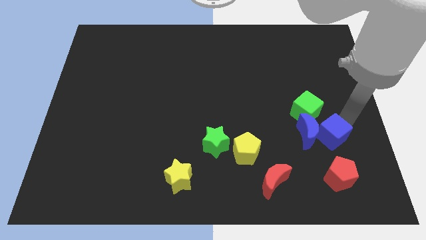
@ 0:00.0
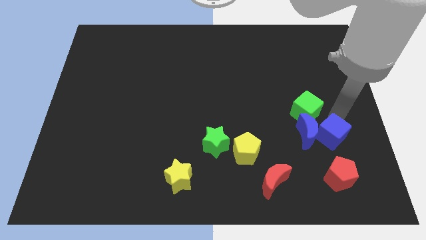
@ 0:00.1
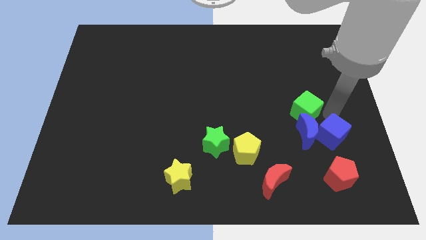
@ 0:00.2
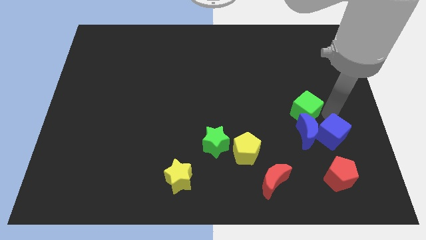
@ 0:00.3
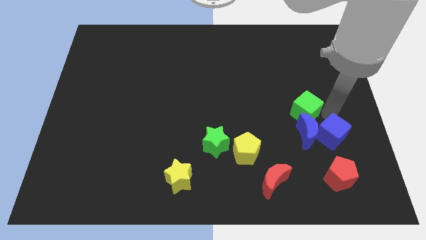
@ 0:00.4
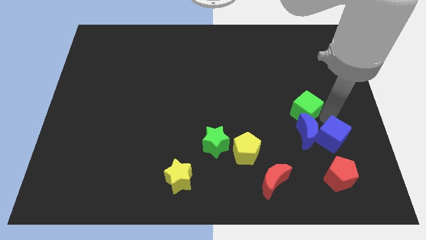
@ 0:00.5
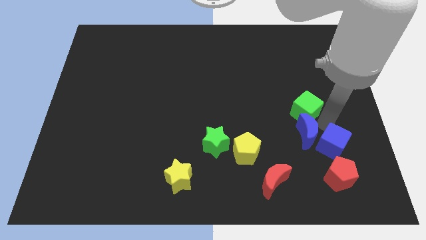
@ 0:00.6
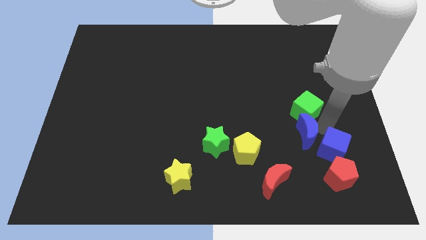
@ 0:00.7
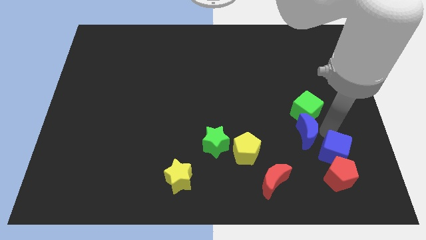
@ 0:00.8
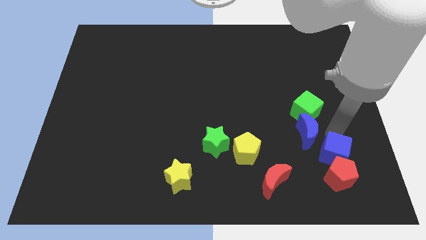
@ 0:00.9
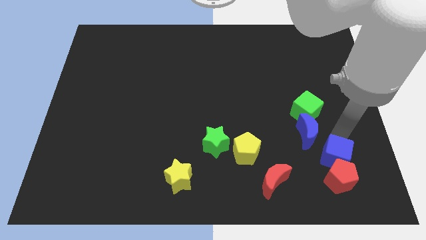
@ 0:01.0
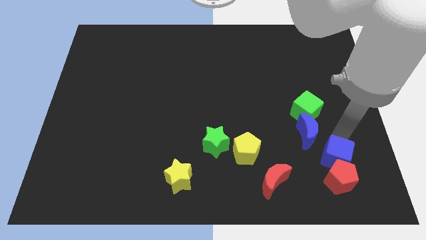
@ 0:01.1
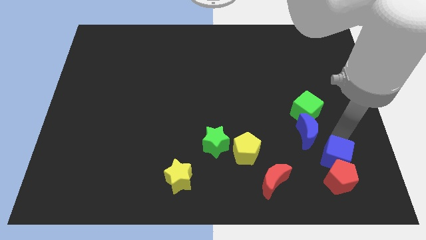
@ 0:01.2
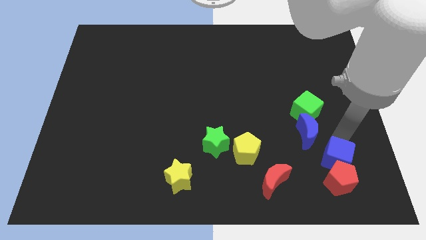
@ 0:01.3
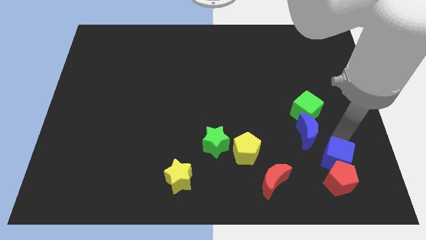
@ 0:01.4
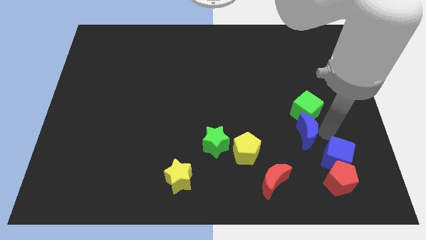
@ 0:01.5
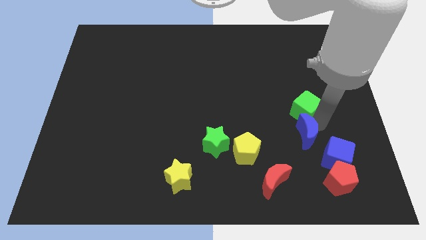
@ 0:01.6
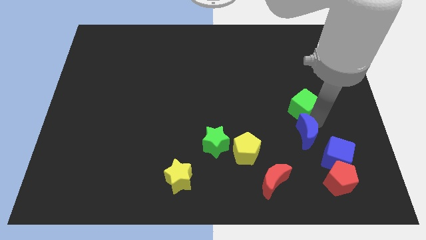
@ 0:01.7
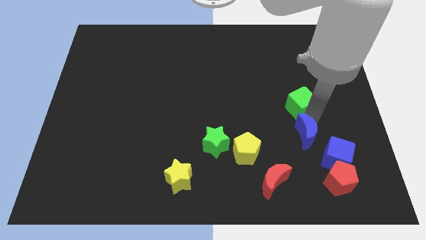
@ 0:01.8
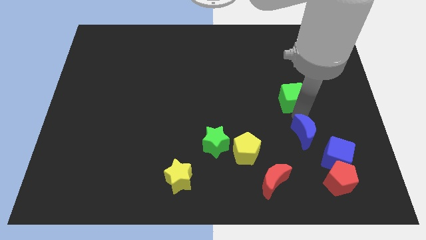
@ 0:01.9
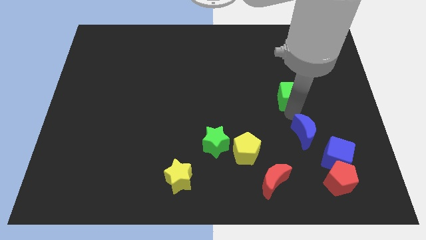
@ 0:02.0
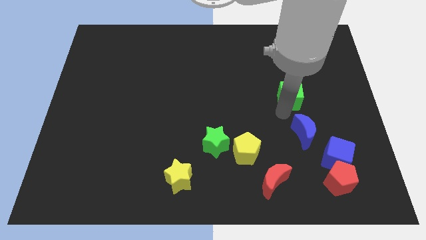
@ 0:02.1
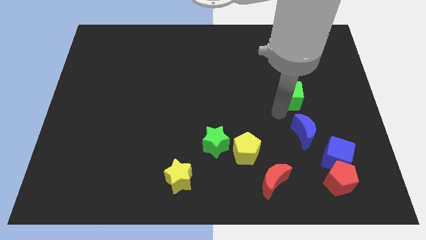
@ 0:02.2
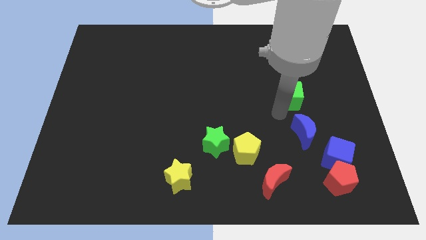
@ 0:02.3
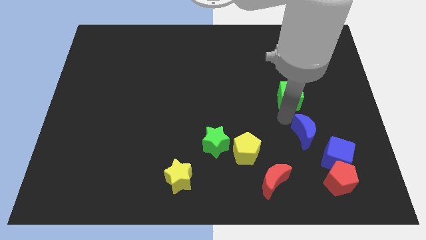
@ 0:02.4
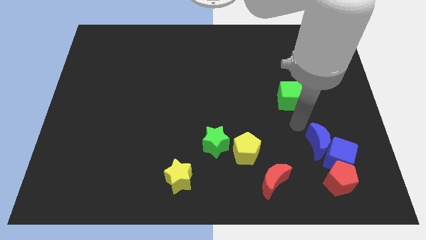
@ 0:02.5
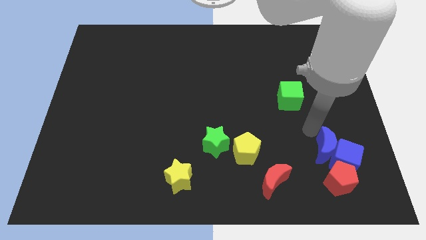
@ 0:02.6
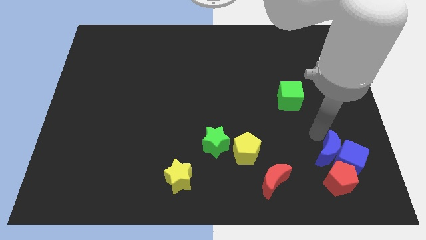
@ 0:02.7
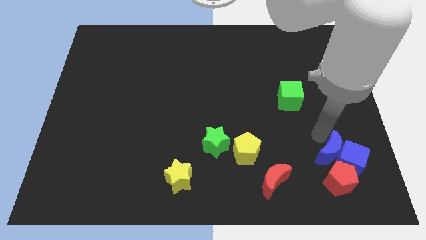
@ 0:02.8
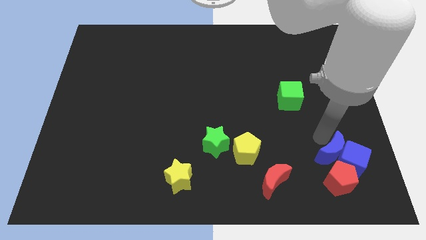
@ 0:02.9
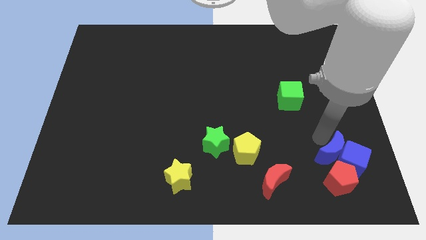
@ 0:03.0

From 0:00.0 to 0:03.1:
push blue cube into red pentagon

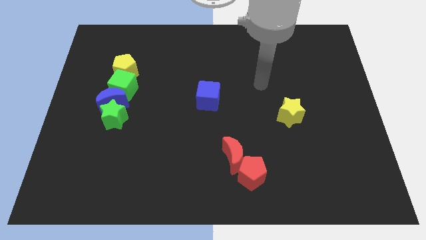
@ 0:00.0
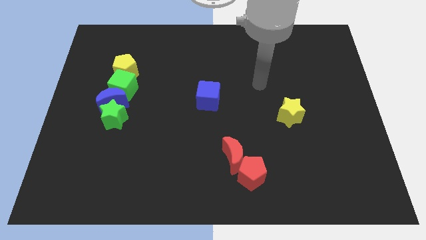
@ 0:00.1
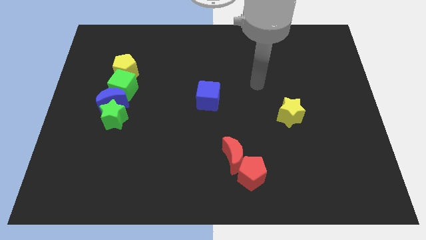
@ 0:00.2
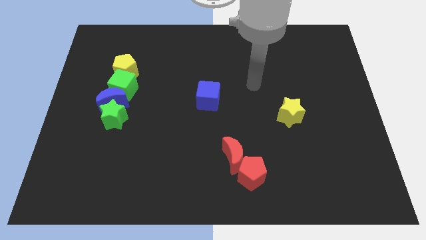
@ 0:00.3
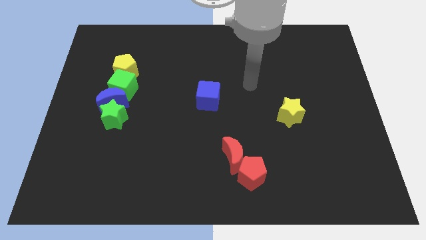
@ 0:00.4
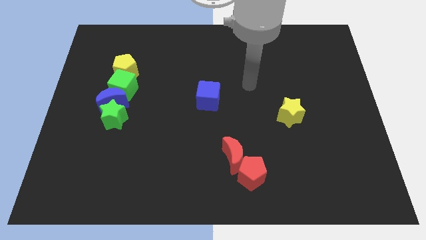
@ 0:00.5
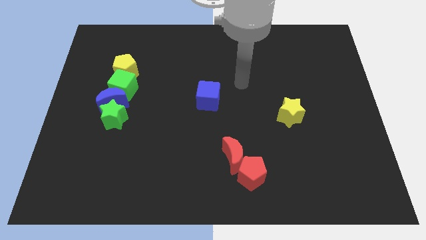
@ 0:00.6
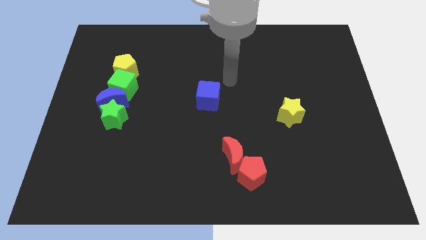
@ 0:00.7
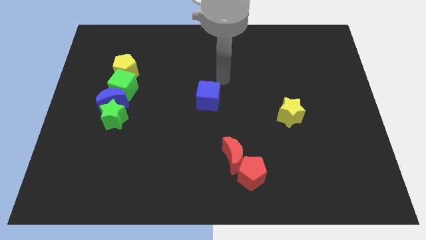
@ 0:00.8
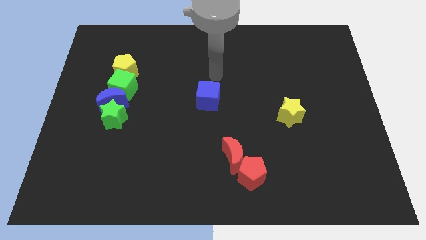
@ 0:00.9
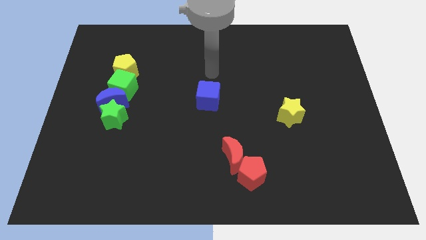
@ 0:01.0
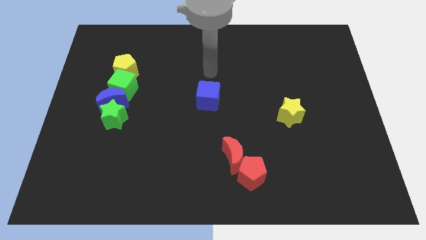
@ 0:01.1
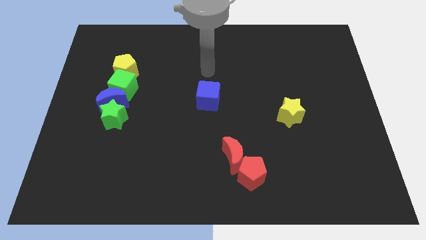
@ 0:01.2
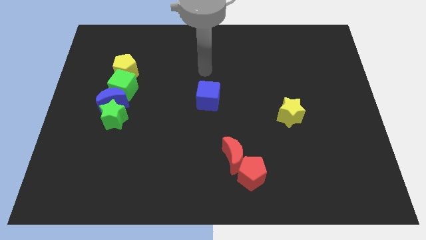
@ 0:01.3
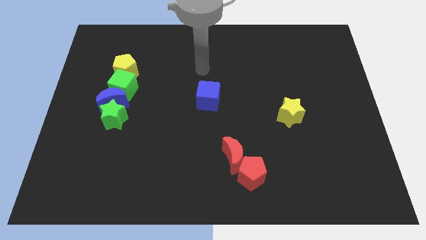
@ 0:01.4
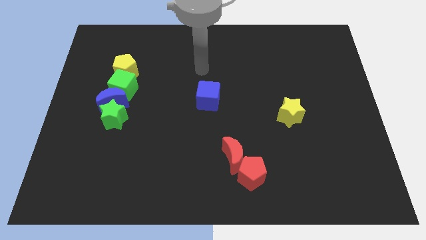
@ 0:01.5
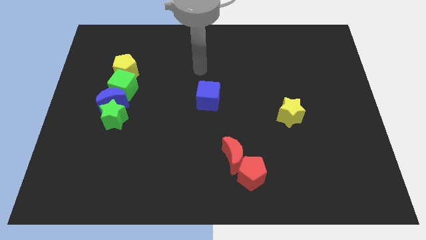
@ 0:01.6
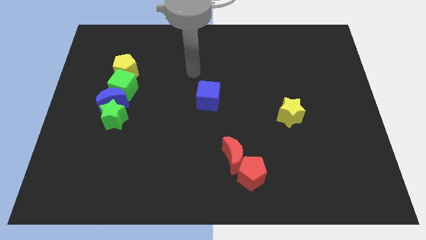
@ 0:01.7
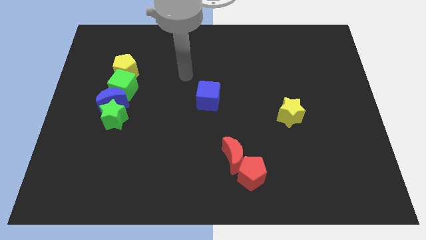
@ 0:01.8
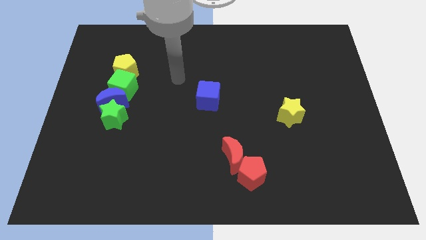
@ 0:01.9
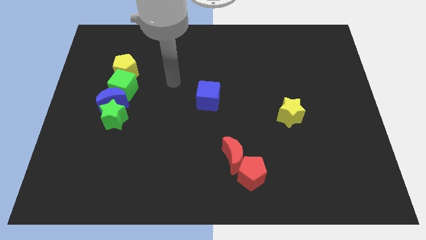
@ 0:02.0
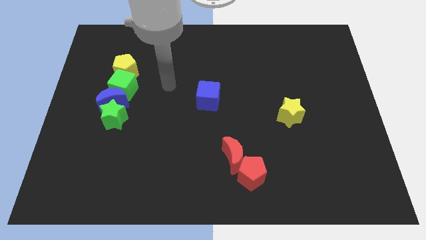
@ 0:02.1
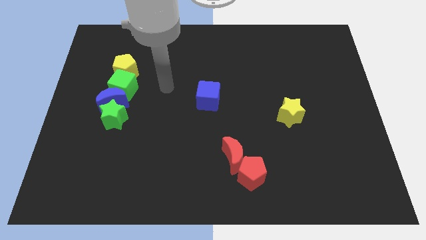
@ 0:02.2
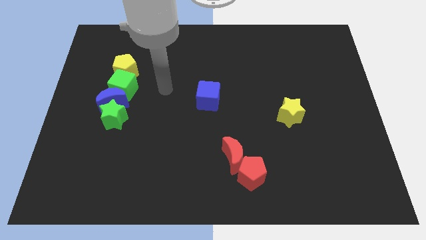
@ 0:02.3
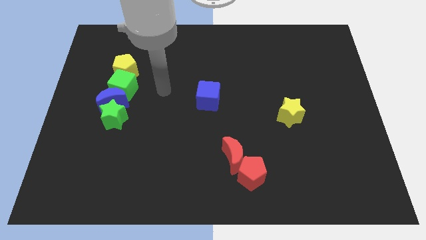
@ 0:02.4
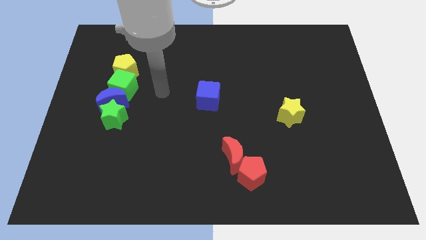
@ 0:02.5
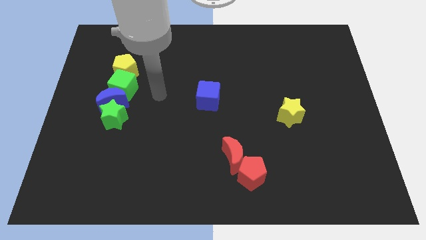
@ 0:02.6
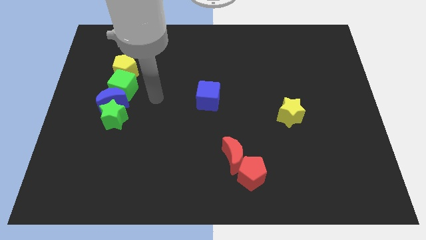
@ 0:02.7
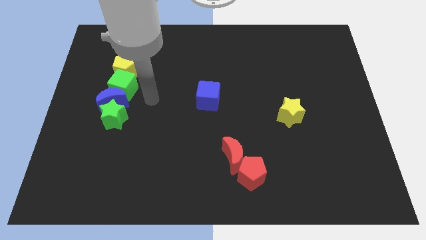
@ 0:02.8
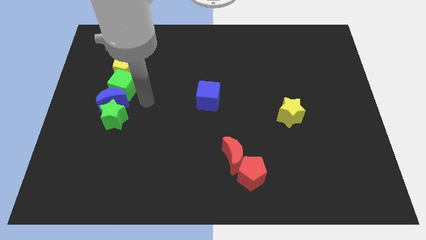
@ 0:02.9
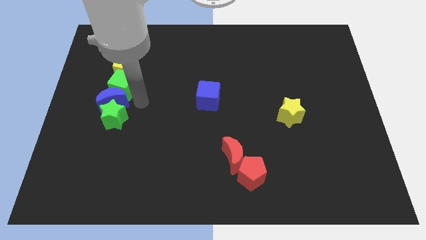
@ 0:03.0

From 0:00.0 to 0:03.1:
move your arm and point to the right of blue moon

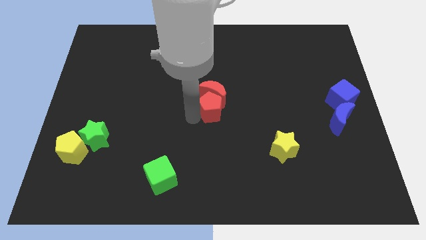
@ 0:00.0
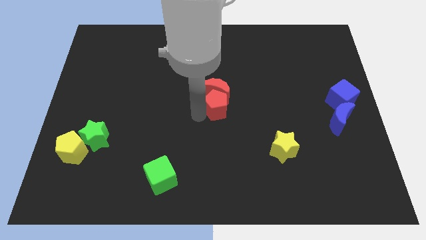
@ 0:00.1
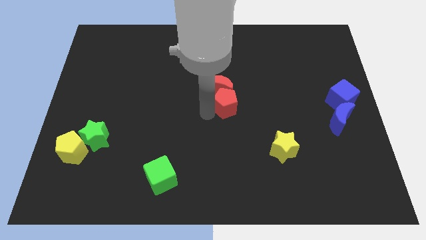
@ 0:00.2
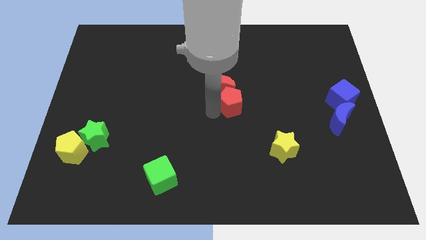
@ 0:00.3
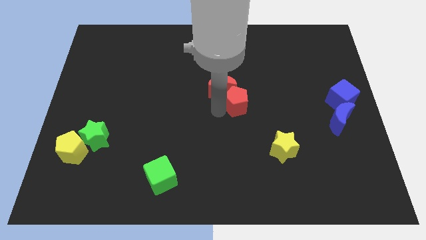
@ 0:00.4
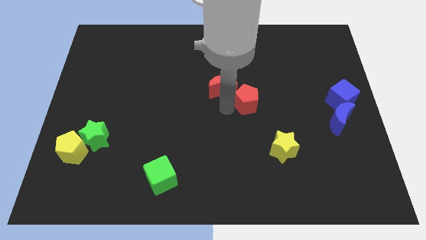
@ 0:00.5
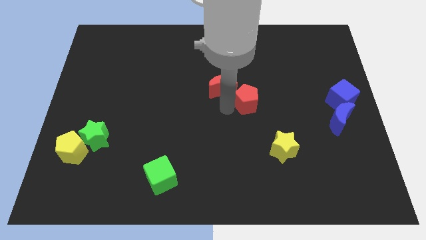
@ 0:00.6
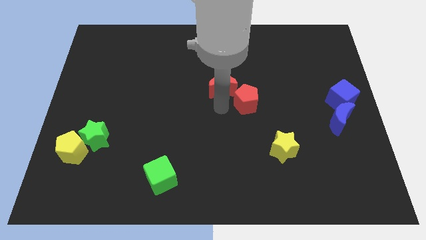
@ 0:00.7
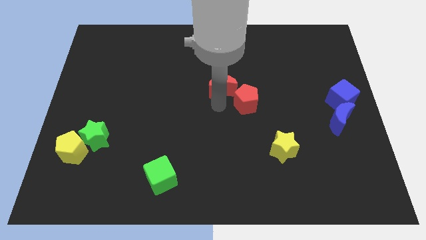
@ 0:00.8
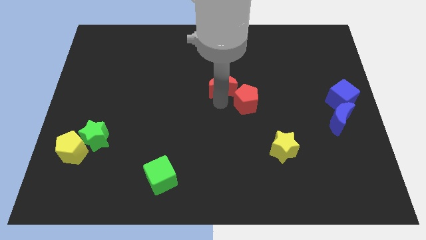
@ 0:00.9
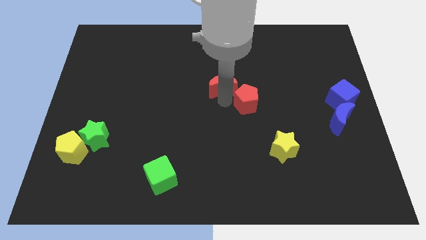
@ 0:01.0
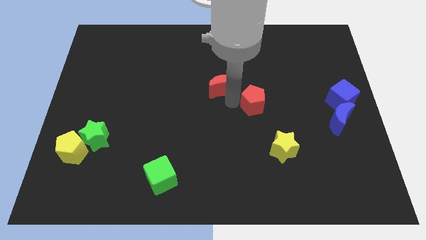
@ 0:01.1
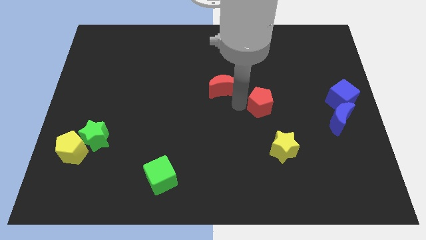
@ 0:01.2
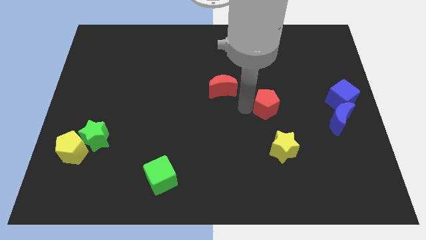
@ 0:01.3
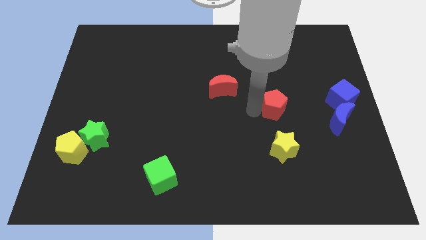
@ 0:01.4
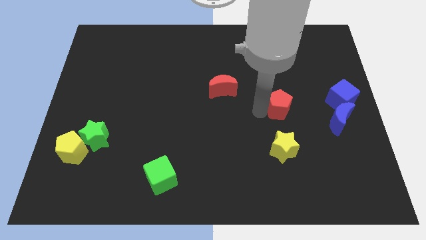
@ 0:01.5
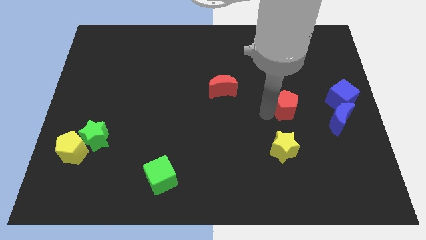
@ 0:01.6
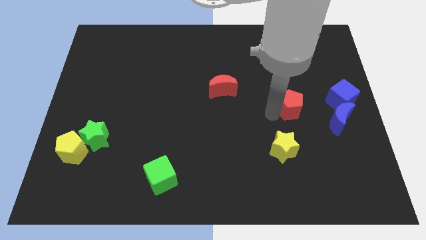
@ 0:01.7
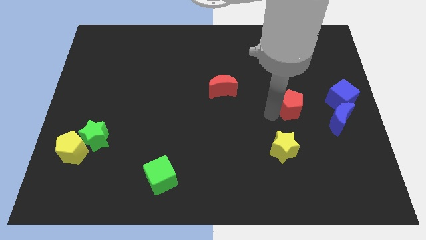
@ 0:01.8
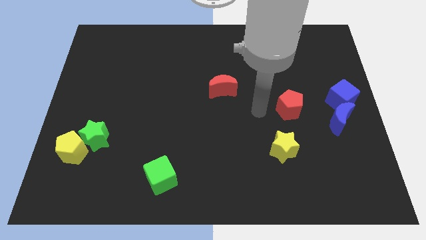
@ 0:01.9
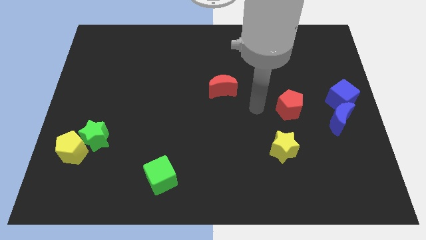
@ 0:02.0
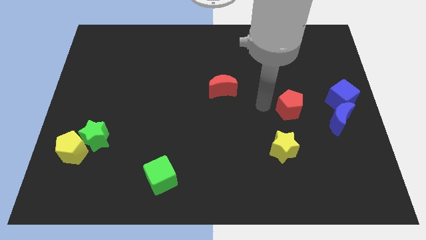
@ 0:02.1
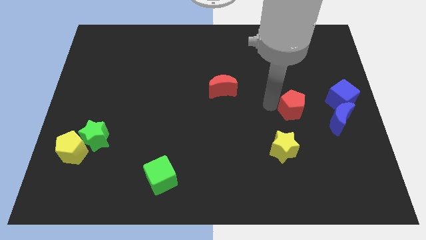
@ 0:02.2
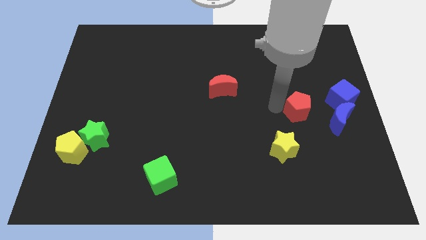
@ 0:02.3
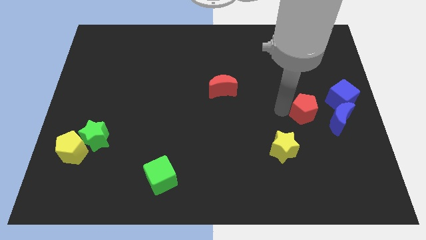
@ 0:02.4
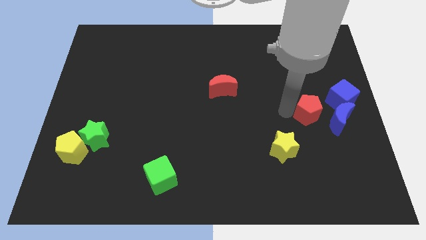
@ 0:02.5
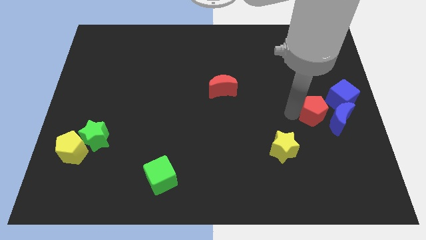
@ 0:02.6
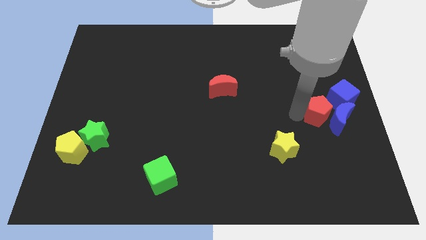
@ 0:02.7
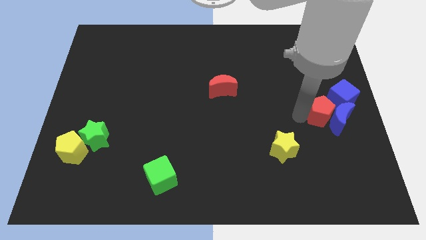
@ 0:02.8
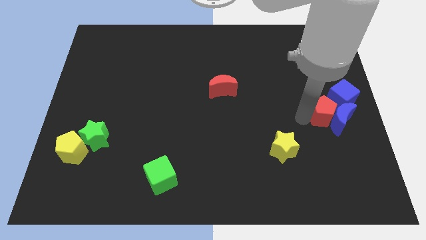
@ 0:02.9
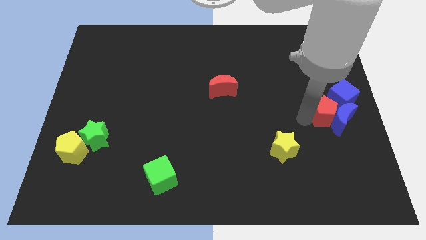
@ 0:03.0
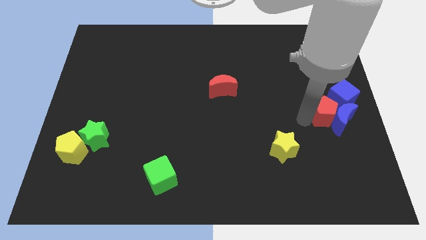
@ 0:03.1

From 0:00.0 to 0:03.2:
separate red pentagon from red moon
